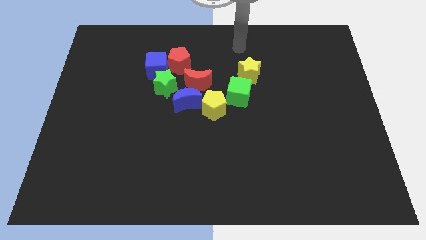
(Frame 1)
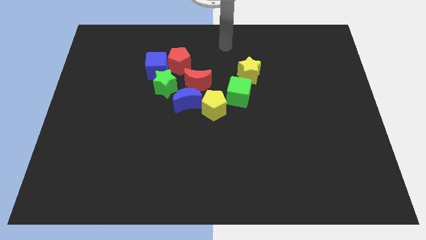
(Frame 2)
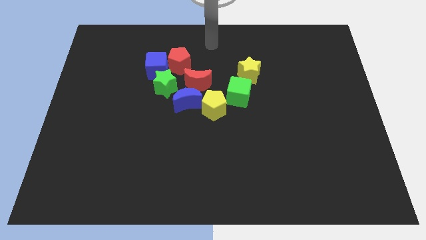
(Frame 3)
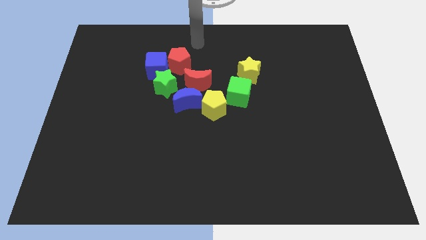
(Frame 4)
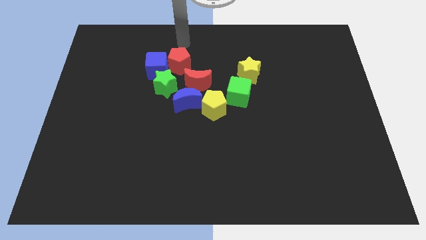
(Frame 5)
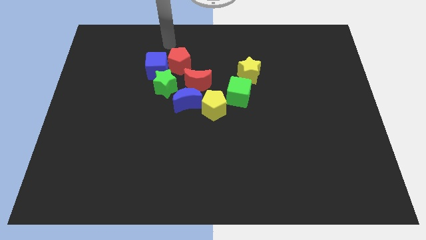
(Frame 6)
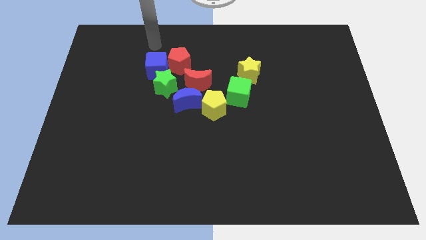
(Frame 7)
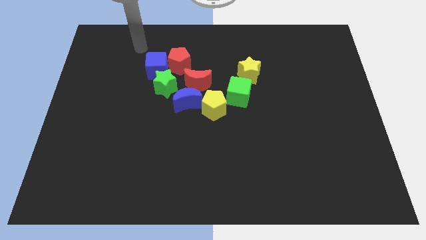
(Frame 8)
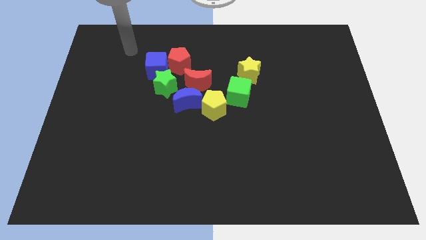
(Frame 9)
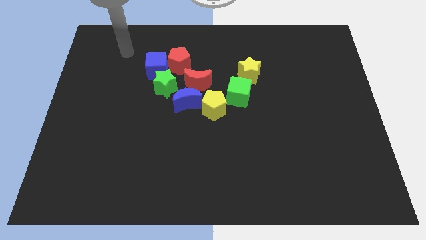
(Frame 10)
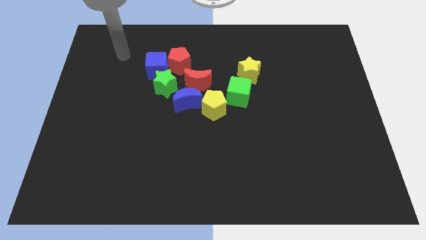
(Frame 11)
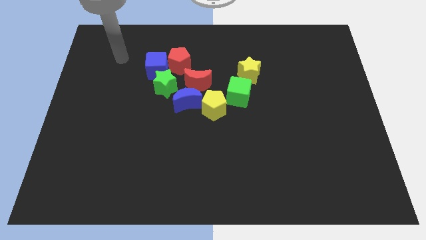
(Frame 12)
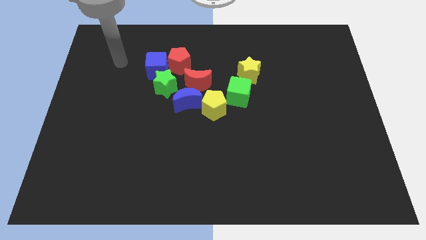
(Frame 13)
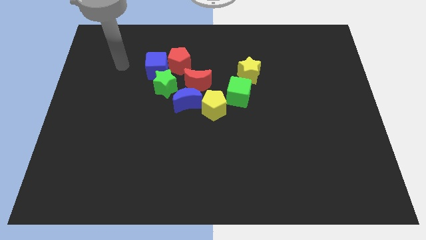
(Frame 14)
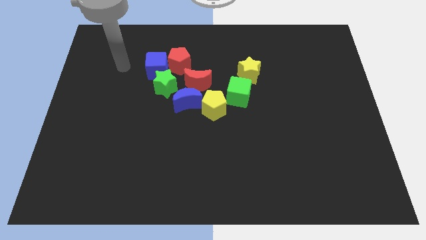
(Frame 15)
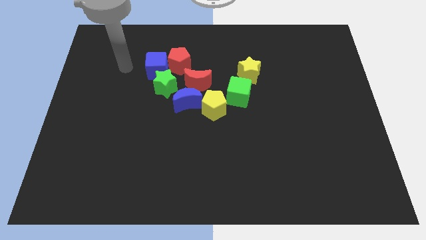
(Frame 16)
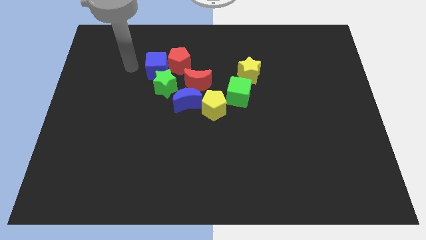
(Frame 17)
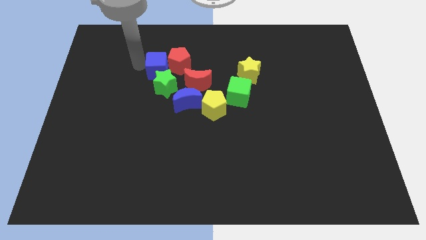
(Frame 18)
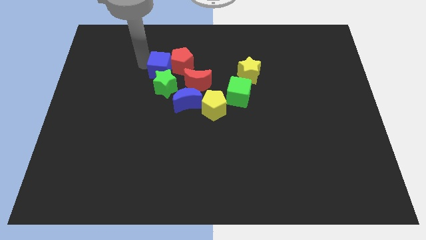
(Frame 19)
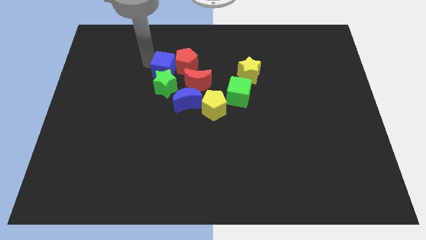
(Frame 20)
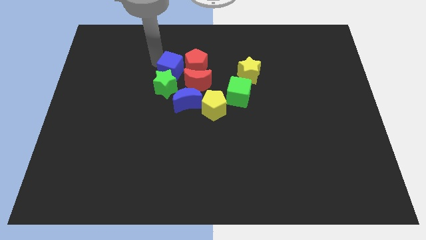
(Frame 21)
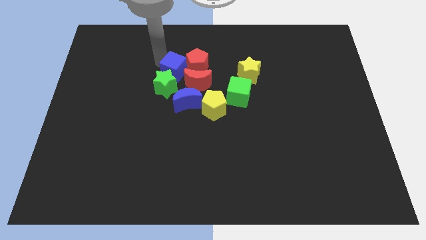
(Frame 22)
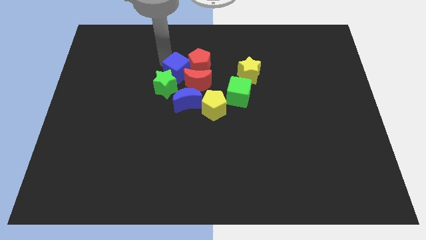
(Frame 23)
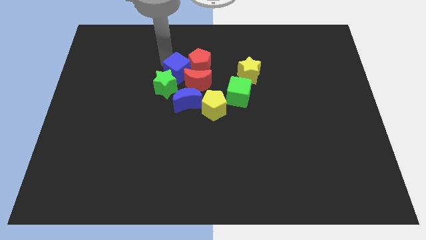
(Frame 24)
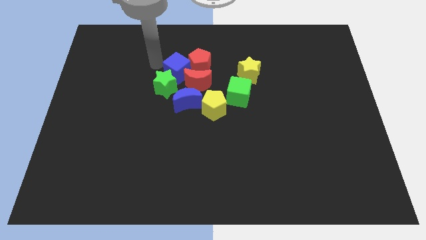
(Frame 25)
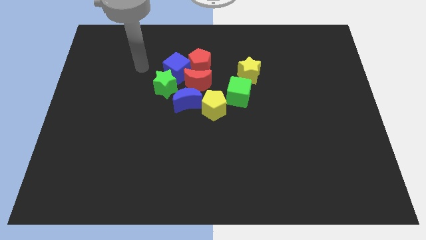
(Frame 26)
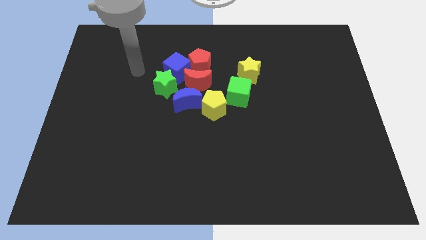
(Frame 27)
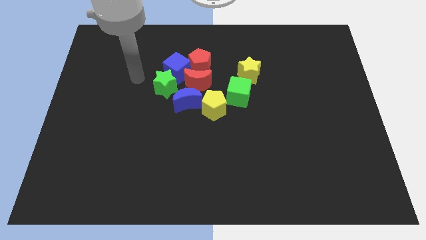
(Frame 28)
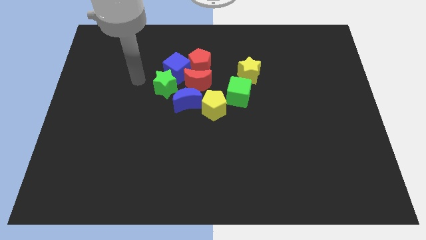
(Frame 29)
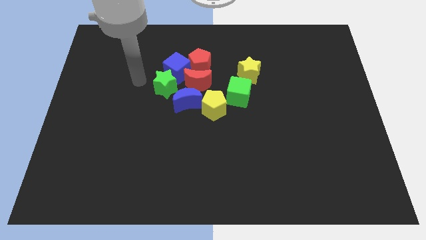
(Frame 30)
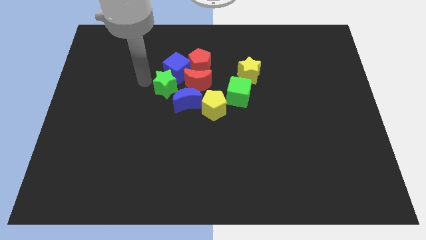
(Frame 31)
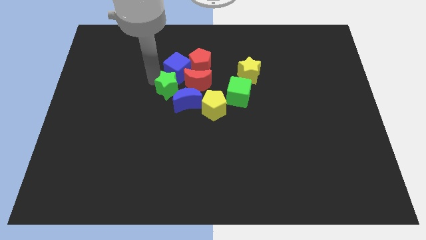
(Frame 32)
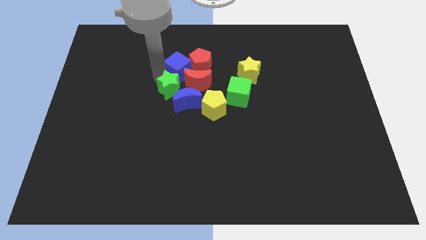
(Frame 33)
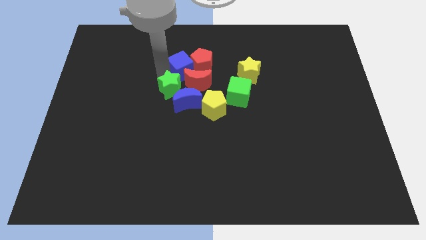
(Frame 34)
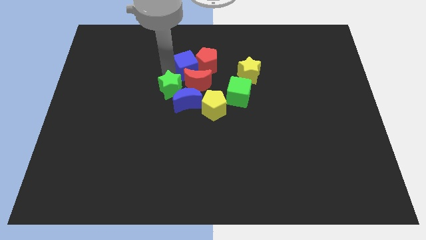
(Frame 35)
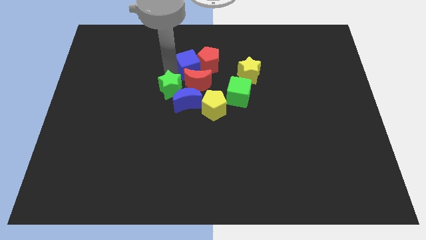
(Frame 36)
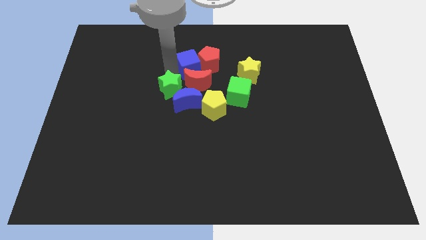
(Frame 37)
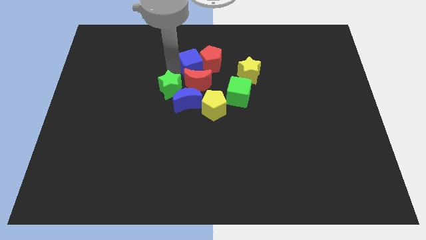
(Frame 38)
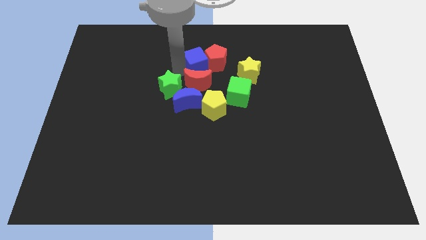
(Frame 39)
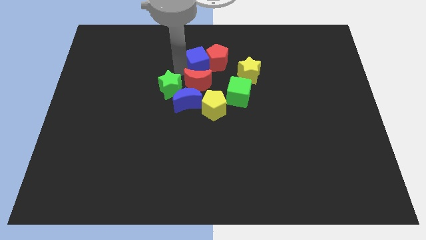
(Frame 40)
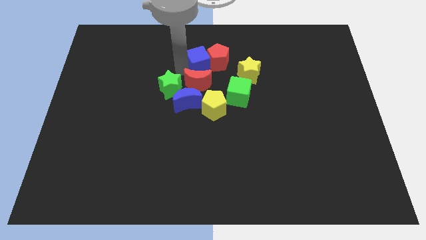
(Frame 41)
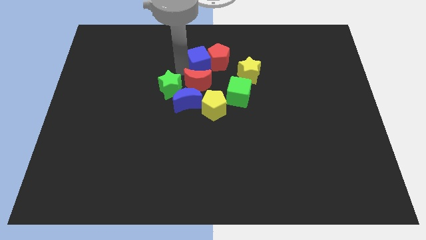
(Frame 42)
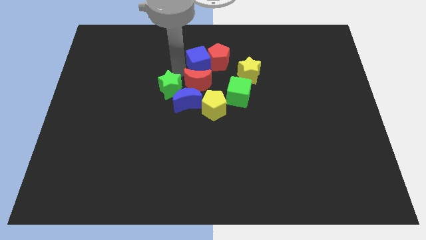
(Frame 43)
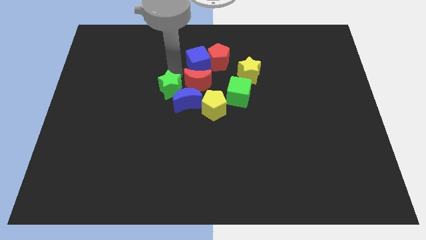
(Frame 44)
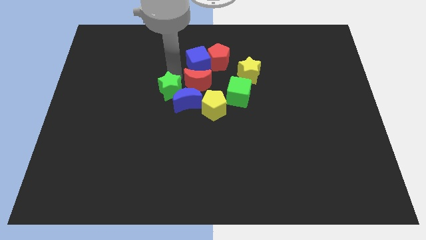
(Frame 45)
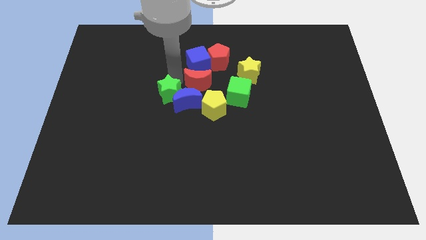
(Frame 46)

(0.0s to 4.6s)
push the blue cube and red pentagon to the right side of the board

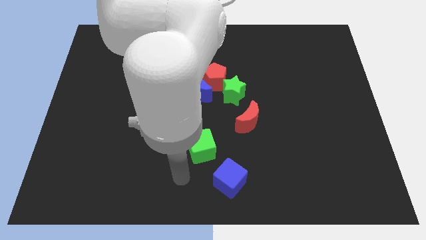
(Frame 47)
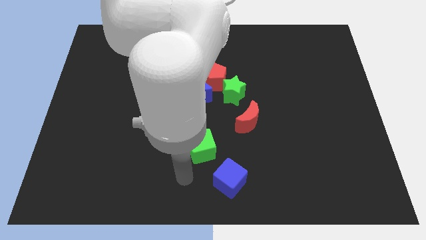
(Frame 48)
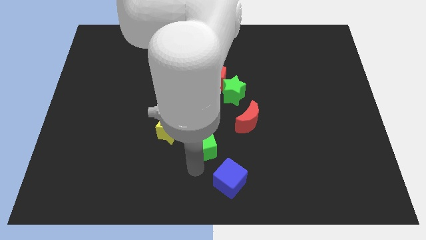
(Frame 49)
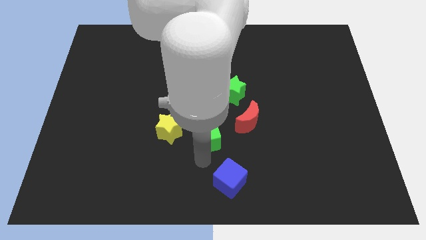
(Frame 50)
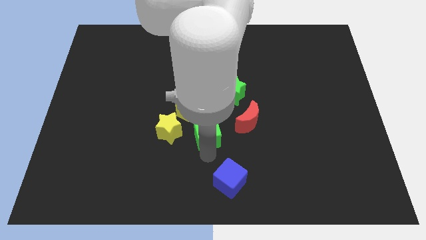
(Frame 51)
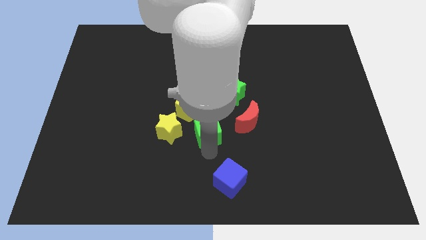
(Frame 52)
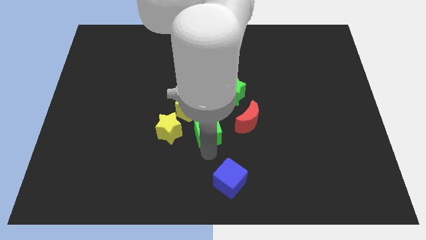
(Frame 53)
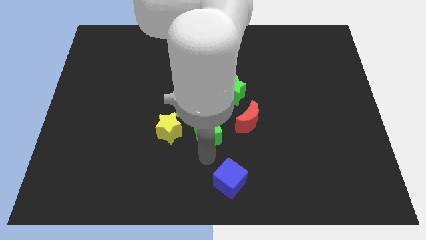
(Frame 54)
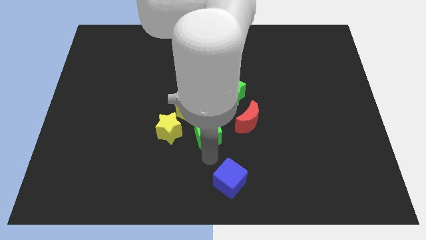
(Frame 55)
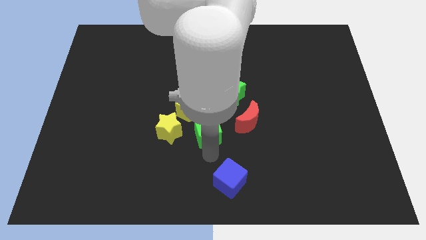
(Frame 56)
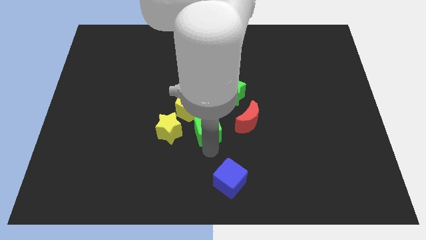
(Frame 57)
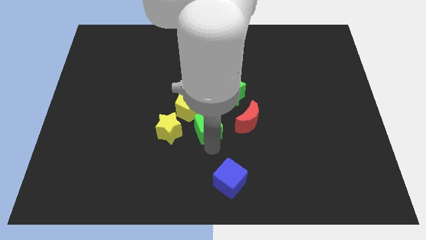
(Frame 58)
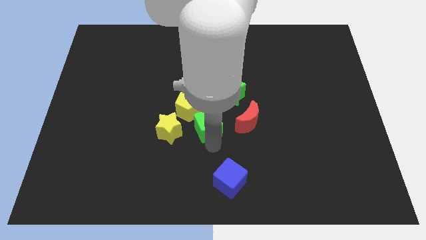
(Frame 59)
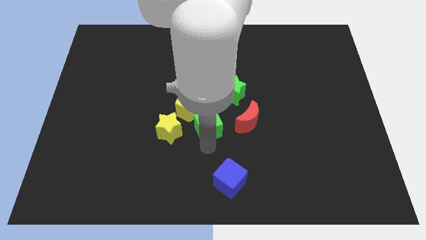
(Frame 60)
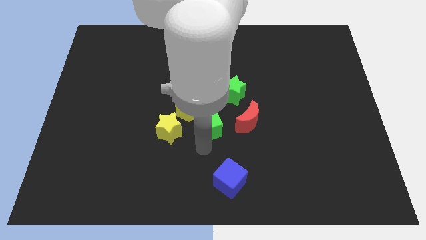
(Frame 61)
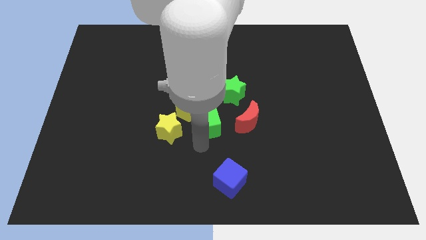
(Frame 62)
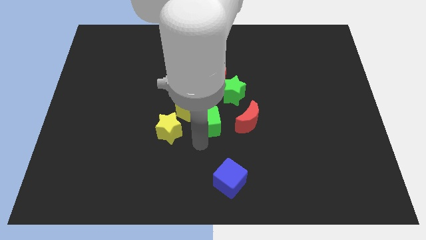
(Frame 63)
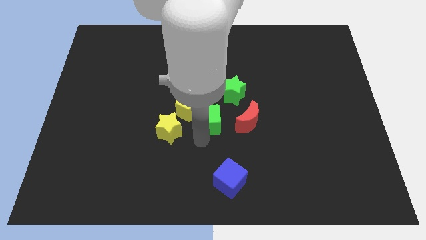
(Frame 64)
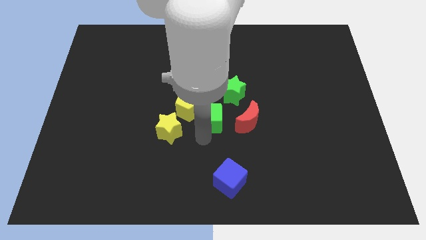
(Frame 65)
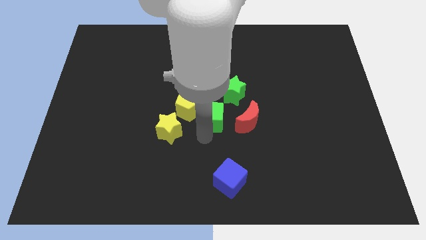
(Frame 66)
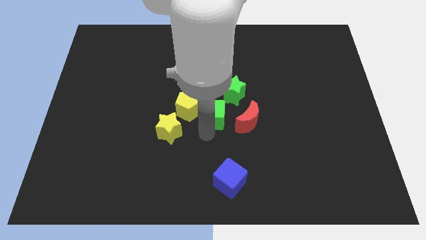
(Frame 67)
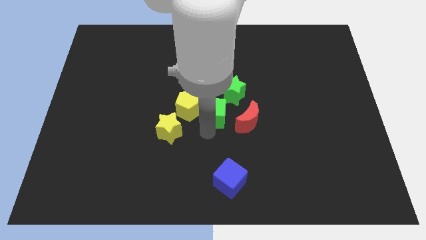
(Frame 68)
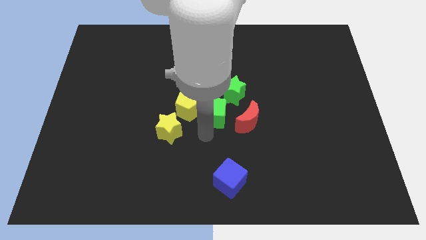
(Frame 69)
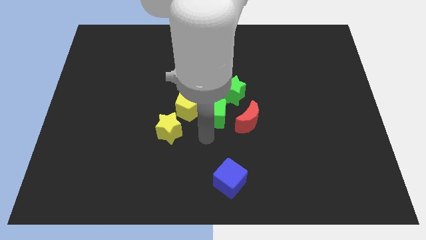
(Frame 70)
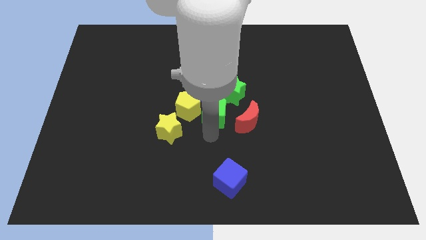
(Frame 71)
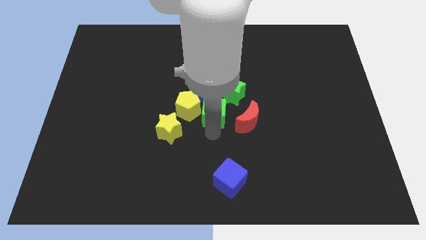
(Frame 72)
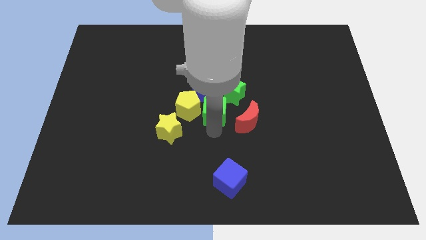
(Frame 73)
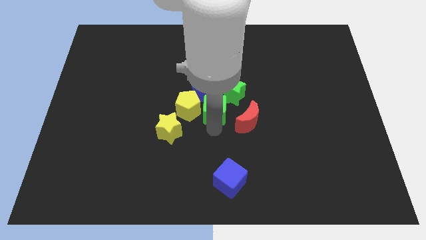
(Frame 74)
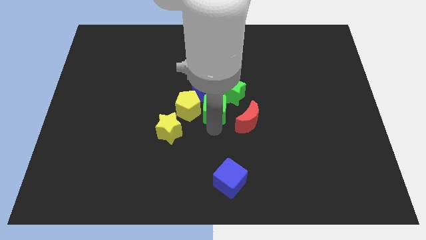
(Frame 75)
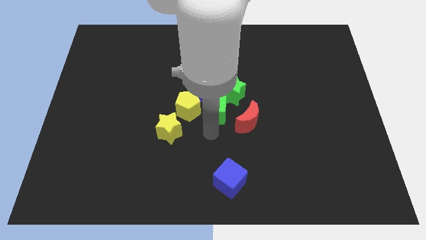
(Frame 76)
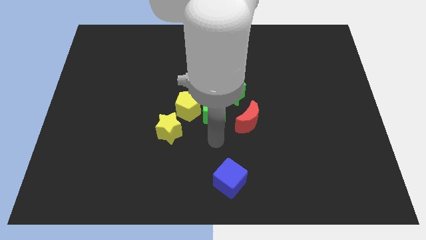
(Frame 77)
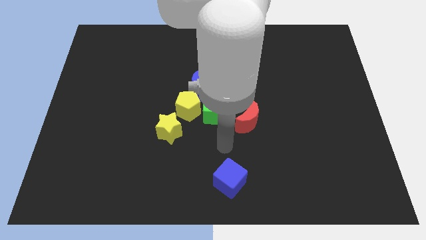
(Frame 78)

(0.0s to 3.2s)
move the green cube to the center of the board

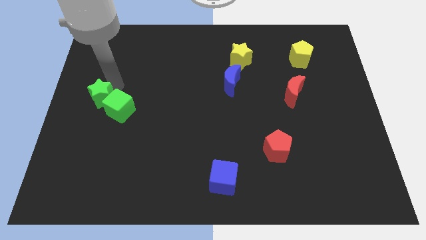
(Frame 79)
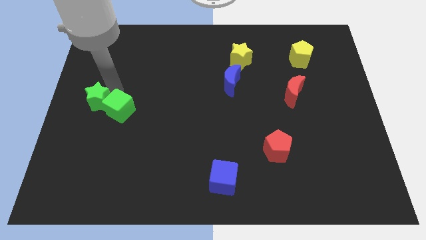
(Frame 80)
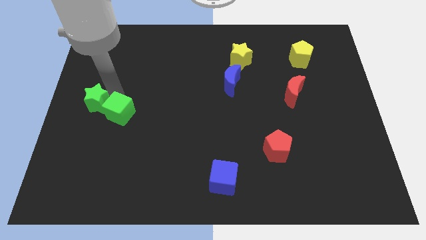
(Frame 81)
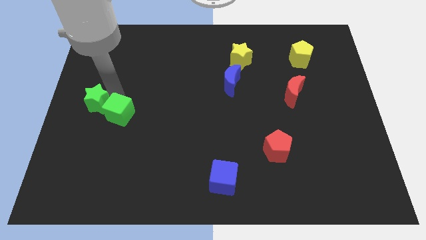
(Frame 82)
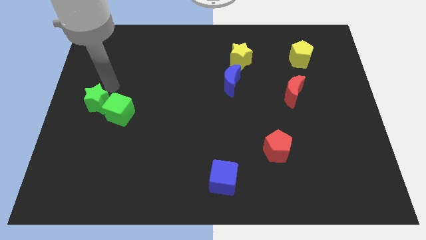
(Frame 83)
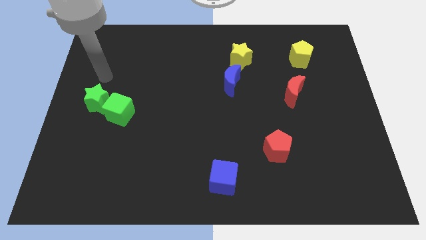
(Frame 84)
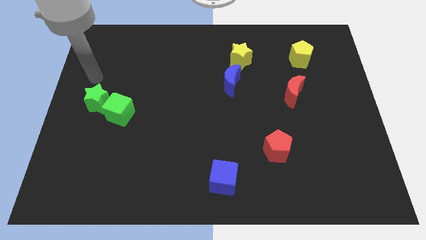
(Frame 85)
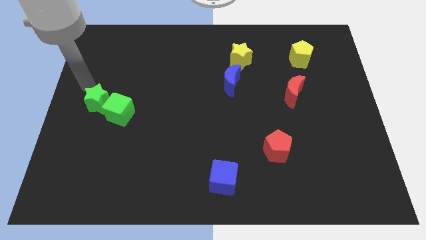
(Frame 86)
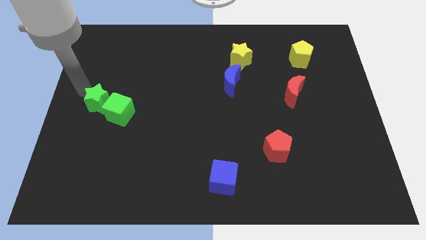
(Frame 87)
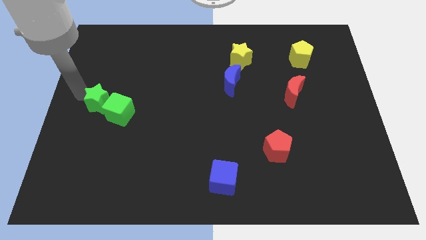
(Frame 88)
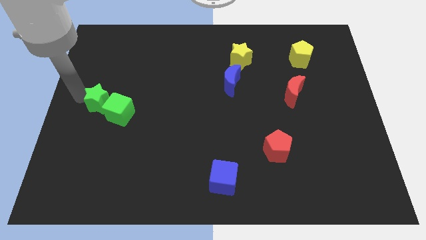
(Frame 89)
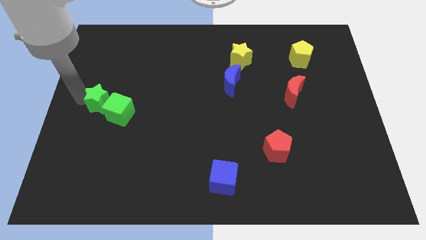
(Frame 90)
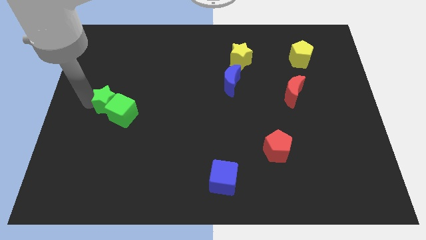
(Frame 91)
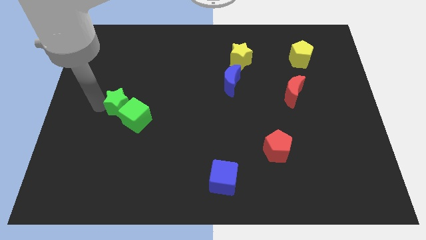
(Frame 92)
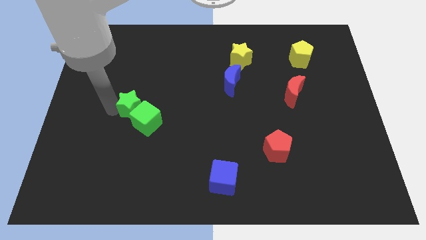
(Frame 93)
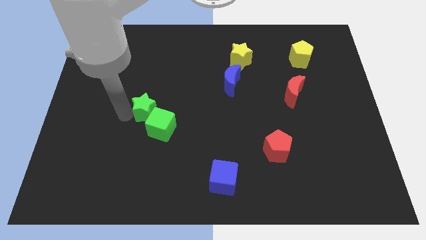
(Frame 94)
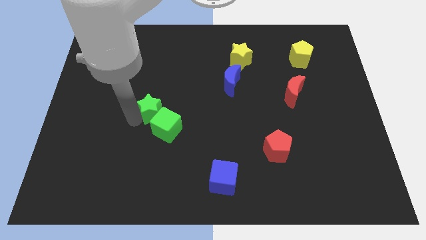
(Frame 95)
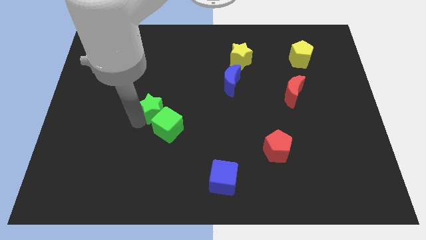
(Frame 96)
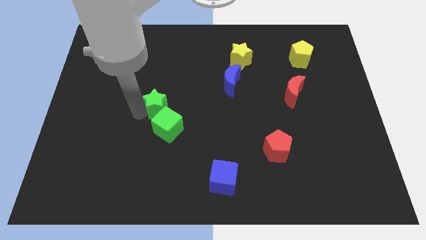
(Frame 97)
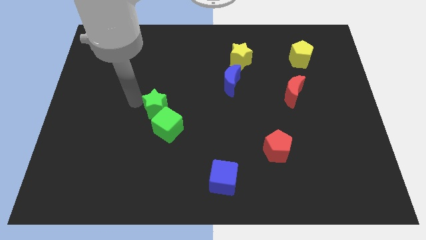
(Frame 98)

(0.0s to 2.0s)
push the green blocks slightly towards the right
